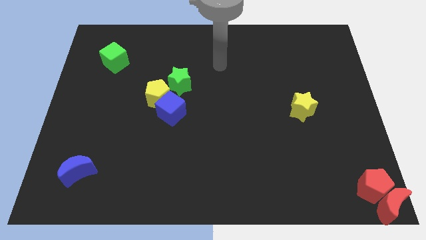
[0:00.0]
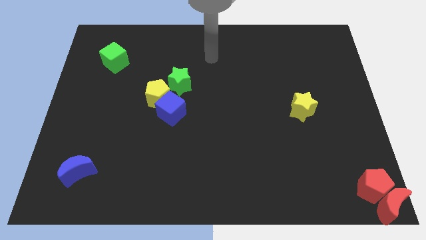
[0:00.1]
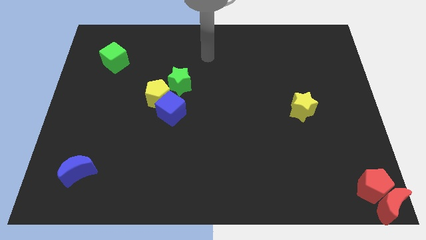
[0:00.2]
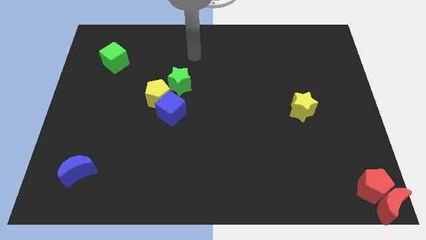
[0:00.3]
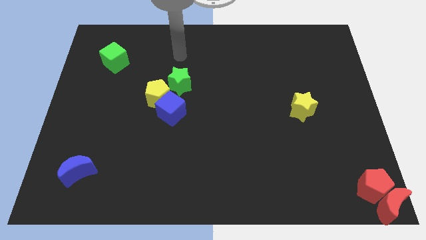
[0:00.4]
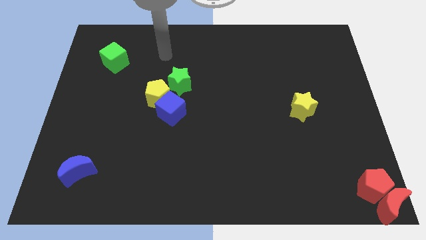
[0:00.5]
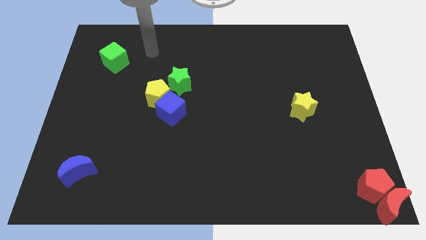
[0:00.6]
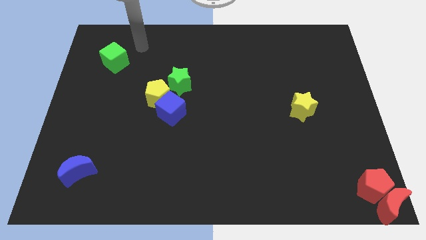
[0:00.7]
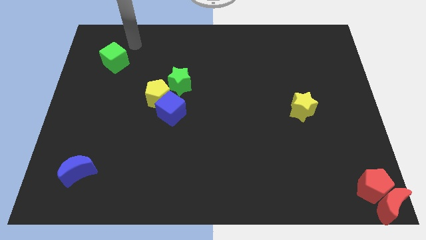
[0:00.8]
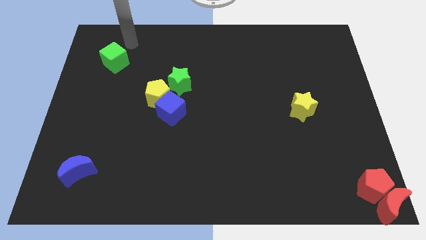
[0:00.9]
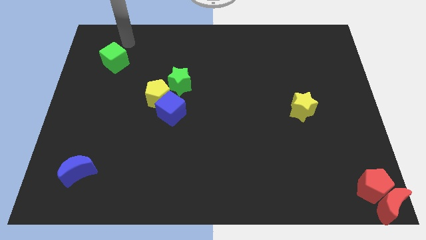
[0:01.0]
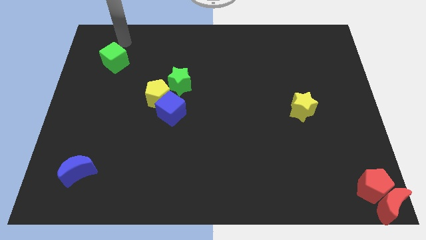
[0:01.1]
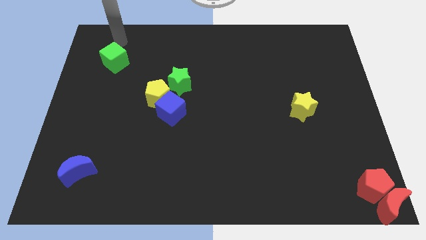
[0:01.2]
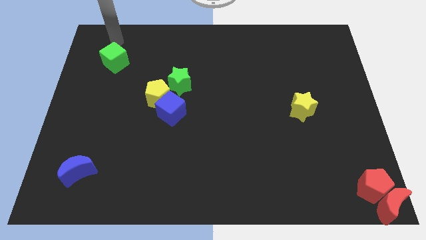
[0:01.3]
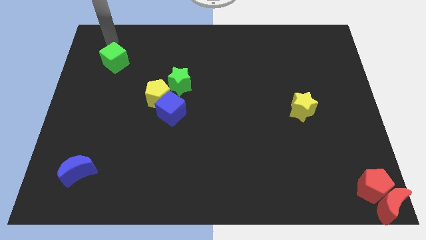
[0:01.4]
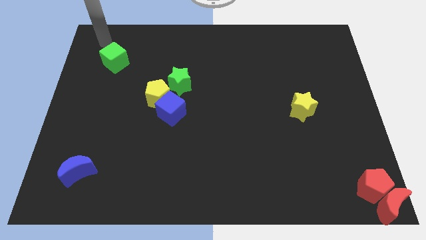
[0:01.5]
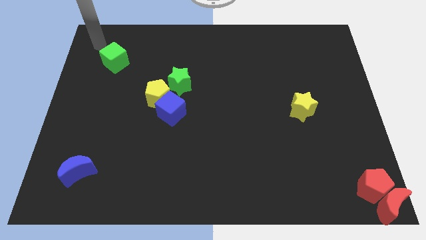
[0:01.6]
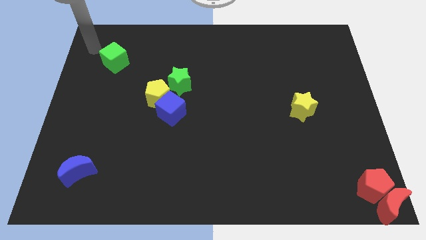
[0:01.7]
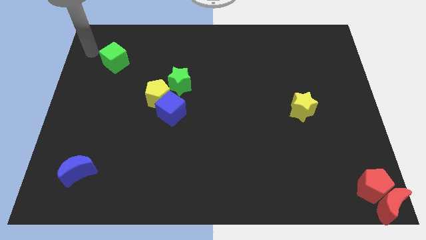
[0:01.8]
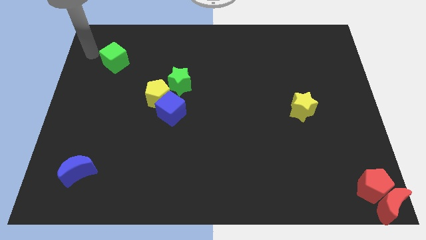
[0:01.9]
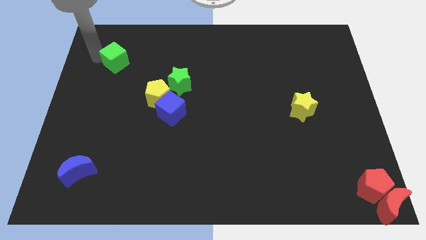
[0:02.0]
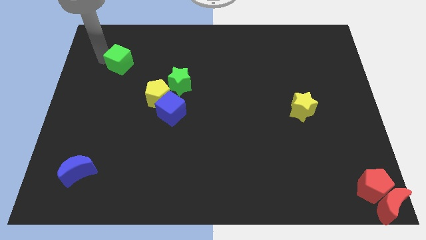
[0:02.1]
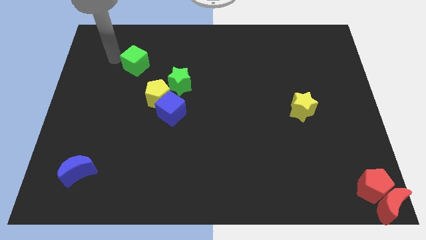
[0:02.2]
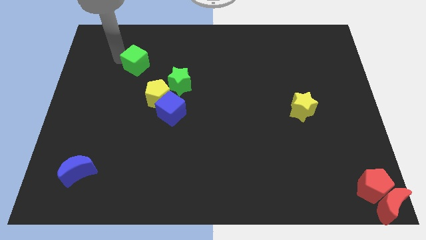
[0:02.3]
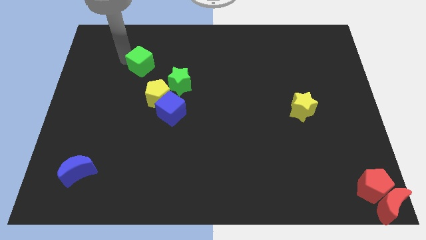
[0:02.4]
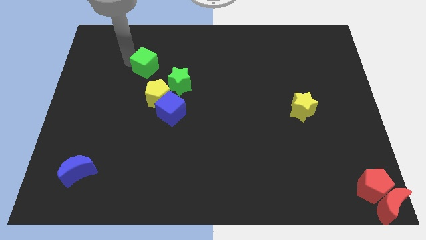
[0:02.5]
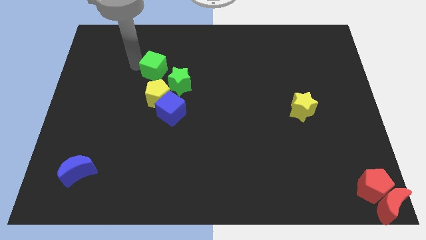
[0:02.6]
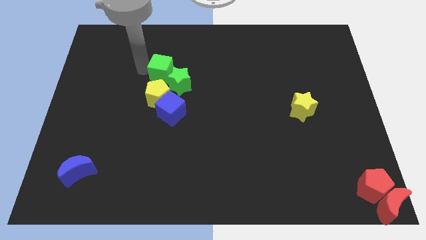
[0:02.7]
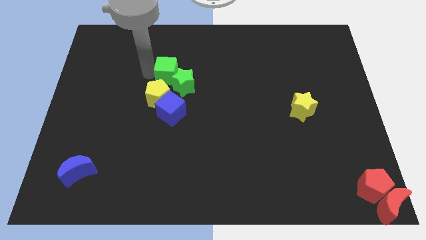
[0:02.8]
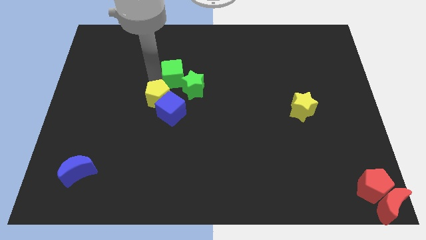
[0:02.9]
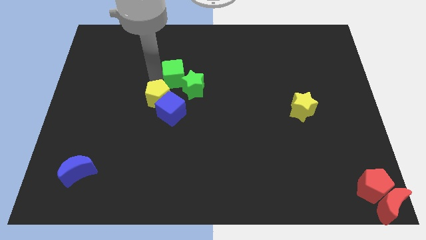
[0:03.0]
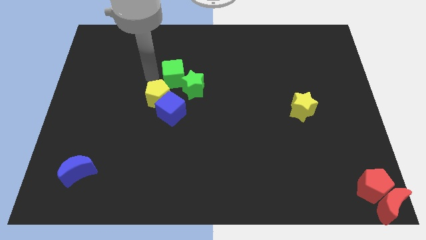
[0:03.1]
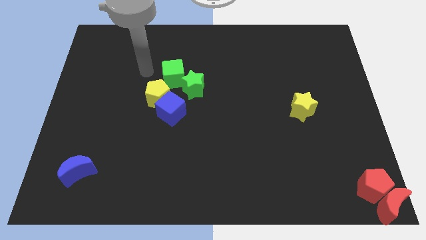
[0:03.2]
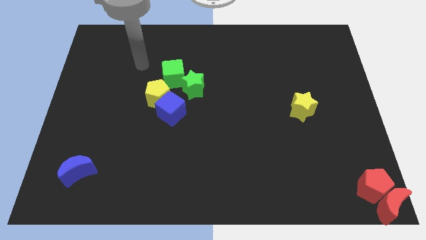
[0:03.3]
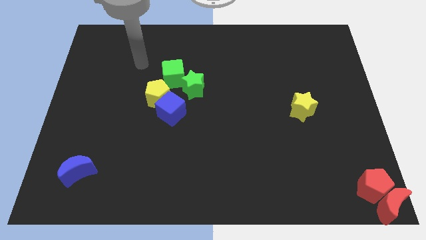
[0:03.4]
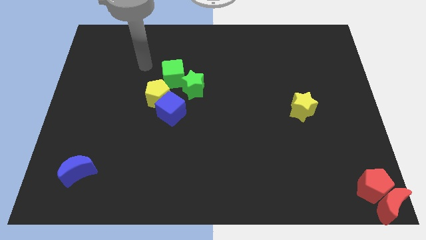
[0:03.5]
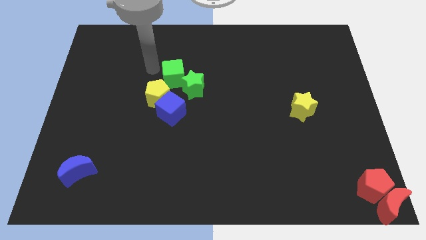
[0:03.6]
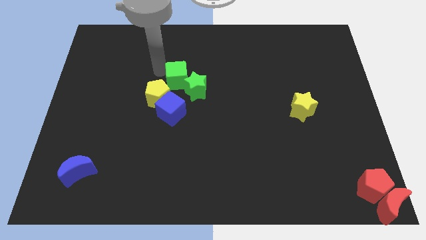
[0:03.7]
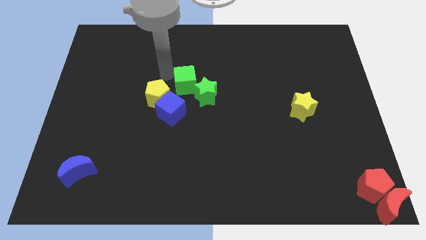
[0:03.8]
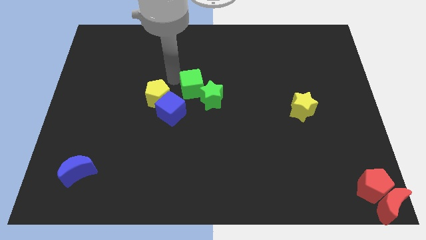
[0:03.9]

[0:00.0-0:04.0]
push the green cube into the green star

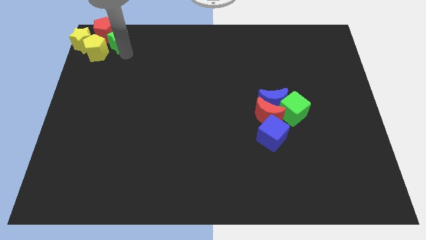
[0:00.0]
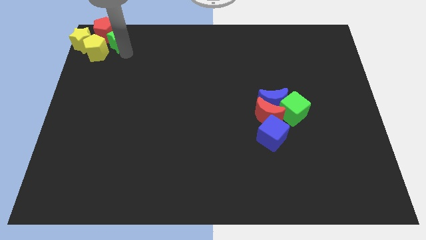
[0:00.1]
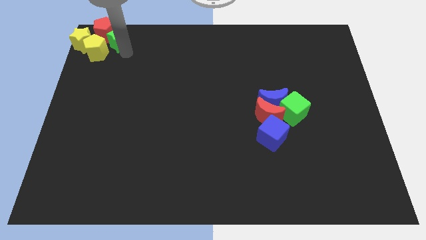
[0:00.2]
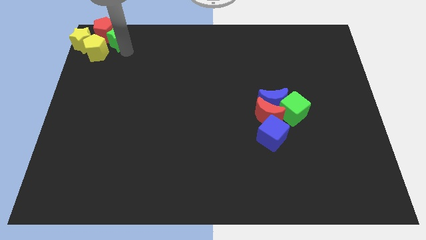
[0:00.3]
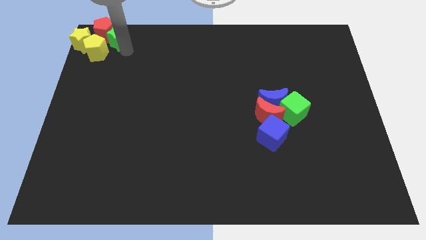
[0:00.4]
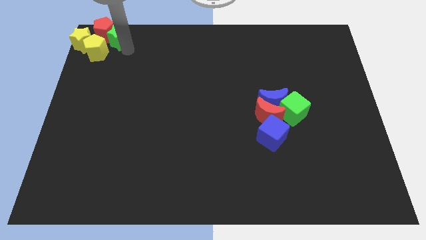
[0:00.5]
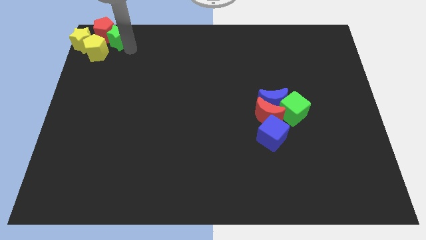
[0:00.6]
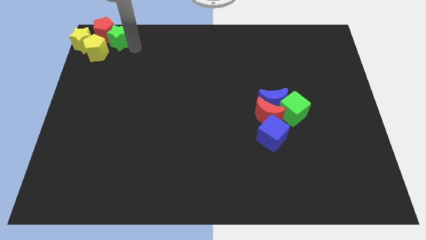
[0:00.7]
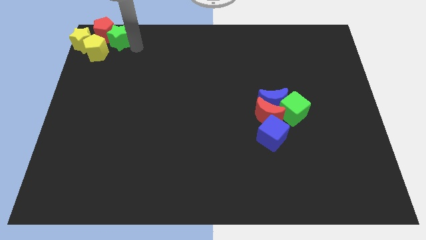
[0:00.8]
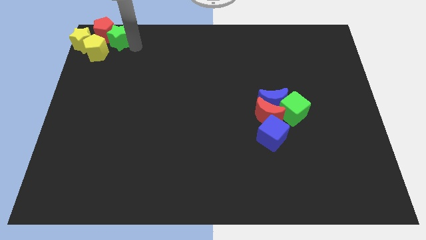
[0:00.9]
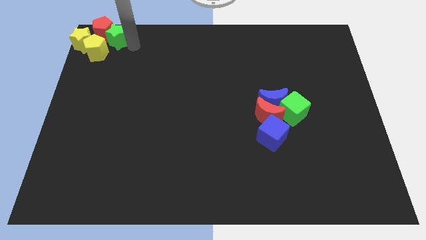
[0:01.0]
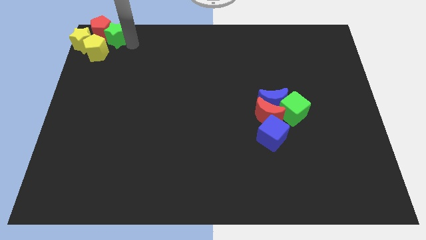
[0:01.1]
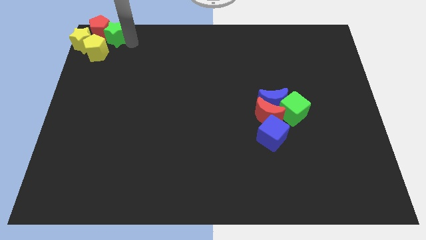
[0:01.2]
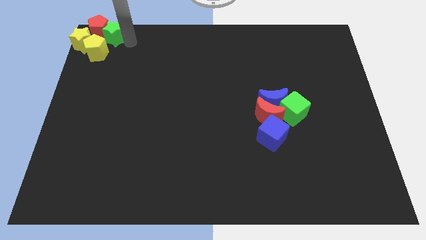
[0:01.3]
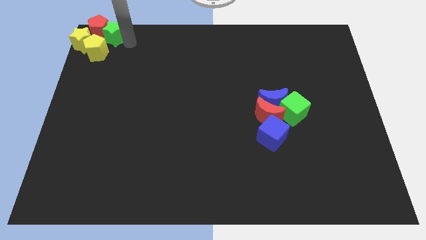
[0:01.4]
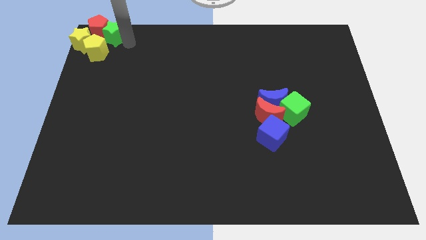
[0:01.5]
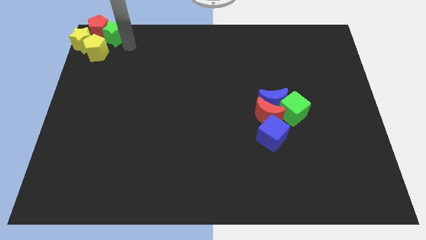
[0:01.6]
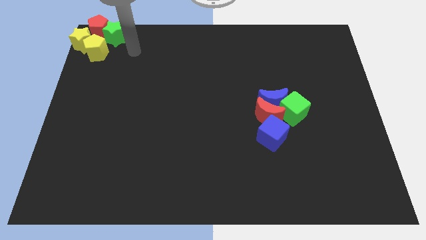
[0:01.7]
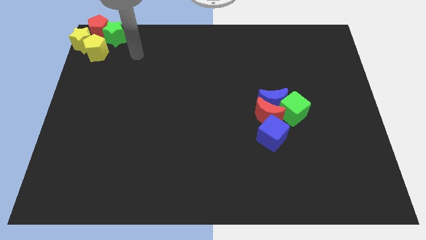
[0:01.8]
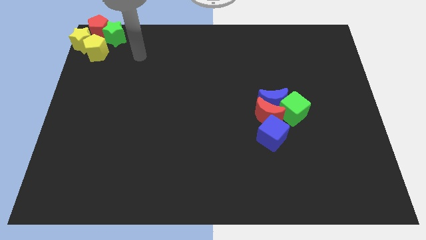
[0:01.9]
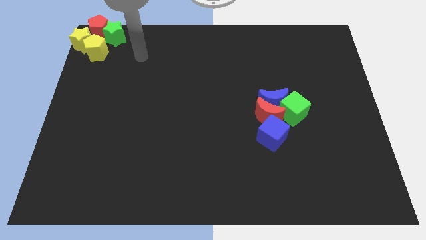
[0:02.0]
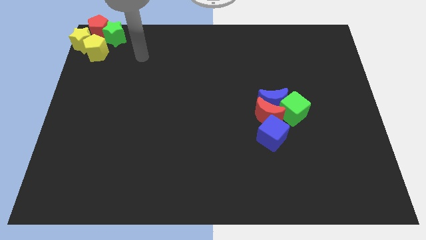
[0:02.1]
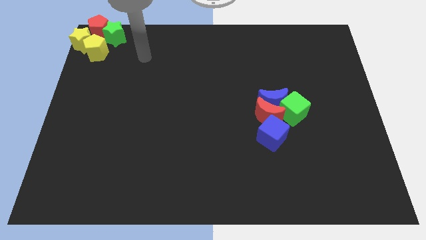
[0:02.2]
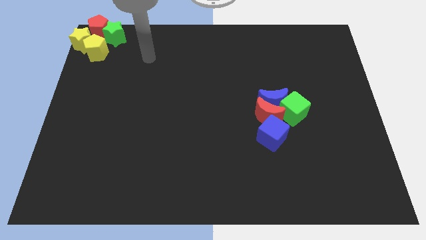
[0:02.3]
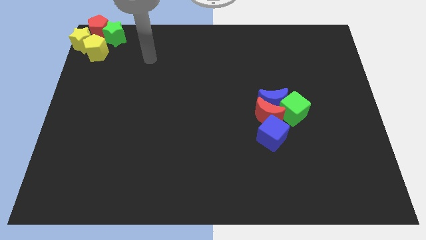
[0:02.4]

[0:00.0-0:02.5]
push the green star into the red pentagon

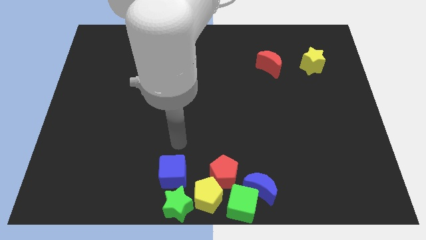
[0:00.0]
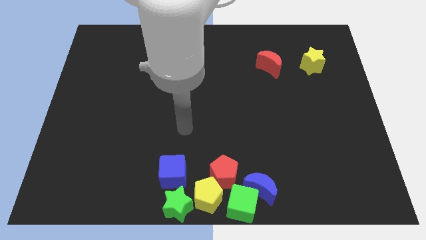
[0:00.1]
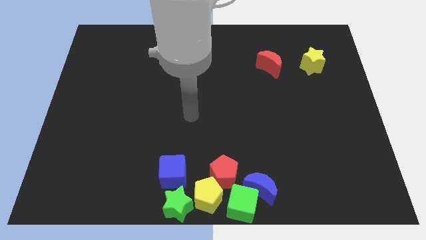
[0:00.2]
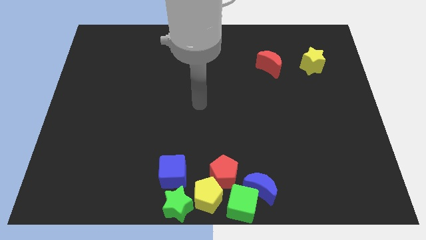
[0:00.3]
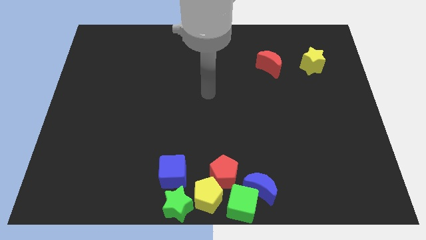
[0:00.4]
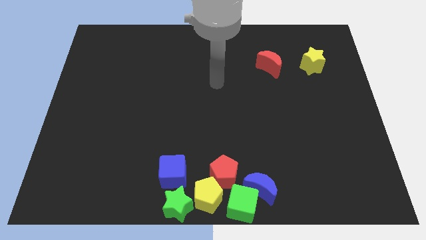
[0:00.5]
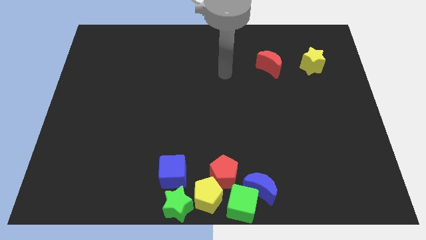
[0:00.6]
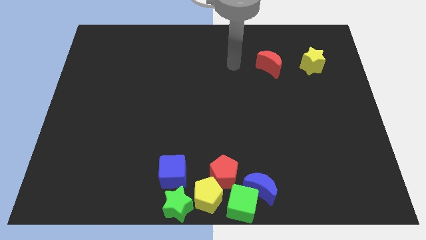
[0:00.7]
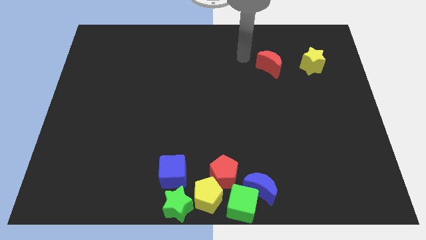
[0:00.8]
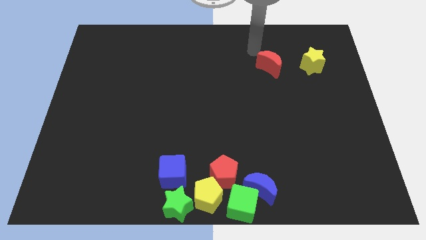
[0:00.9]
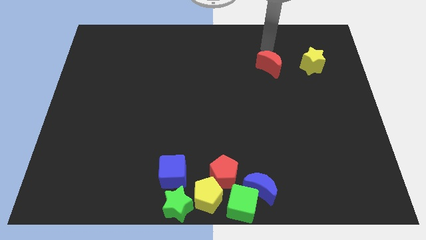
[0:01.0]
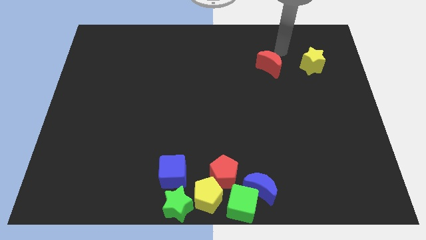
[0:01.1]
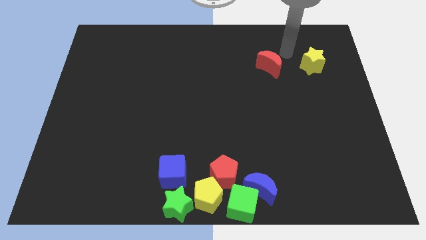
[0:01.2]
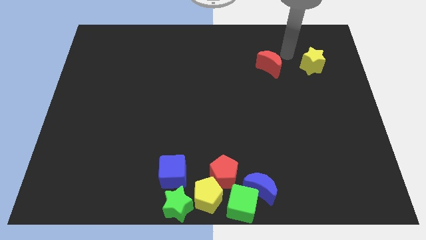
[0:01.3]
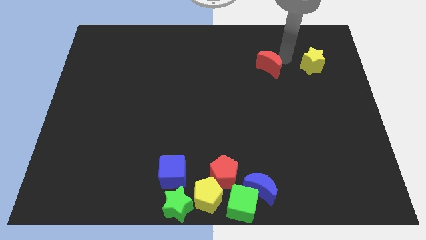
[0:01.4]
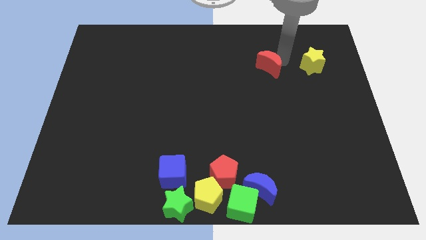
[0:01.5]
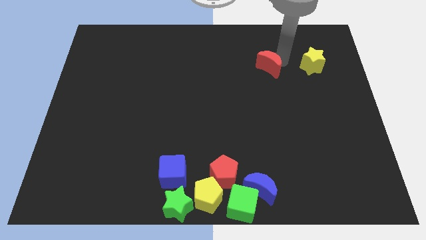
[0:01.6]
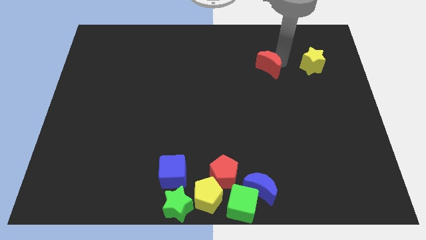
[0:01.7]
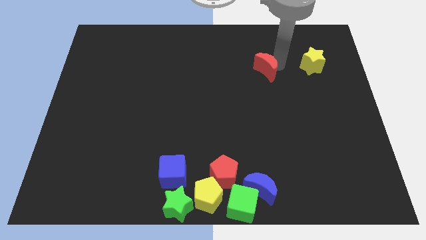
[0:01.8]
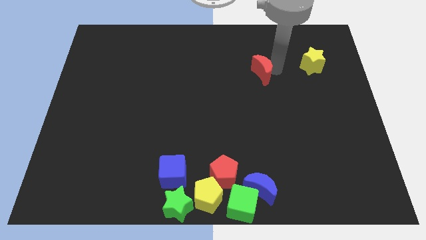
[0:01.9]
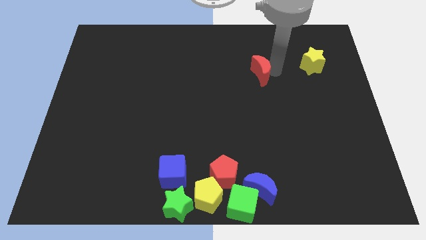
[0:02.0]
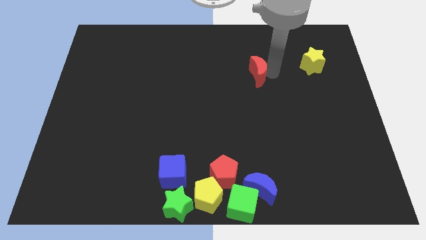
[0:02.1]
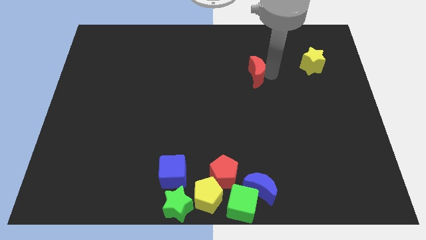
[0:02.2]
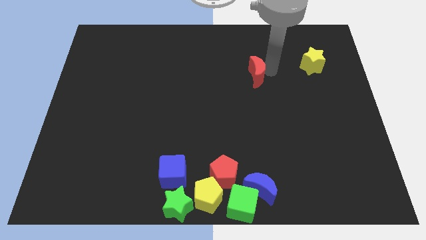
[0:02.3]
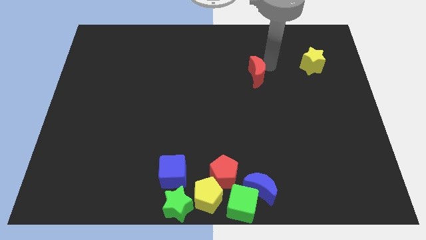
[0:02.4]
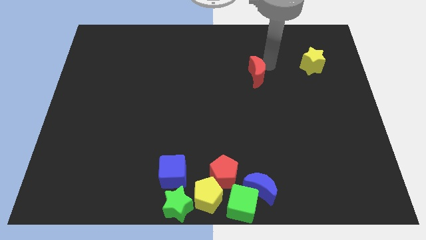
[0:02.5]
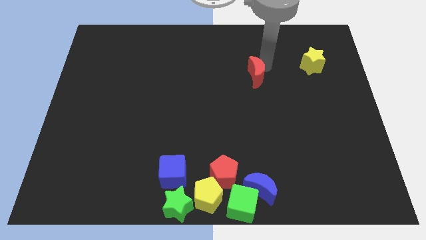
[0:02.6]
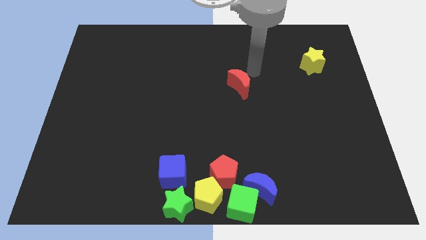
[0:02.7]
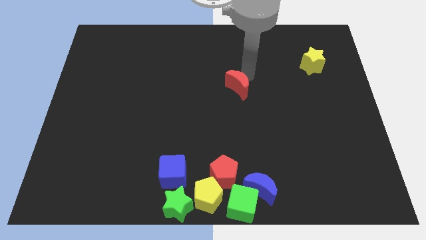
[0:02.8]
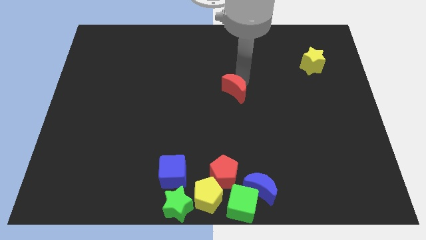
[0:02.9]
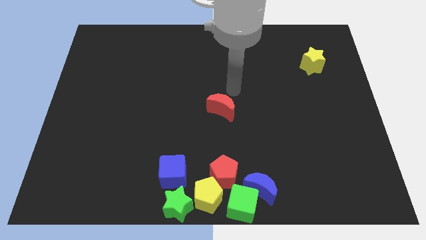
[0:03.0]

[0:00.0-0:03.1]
move the red moon vertically above the red pentagon
